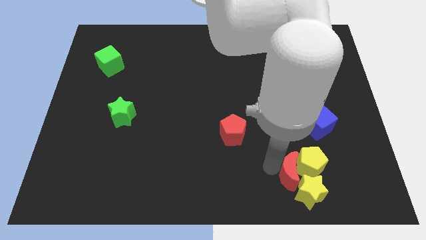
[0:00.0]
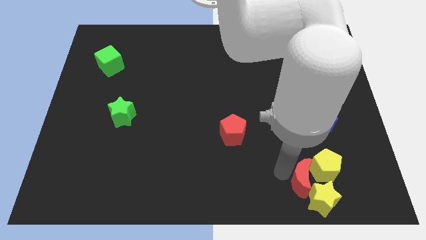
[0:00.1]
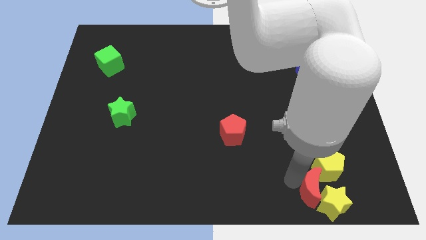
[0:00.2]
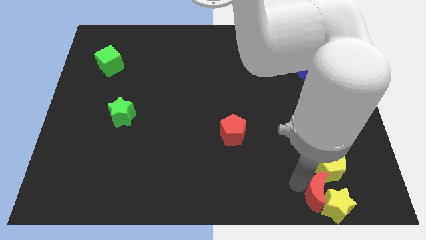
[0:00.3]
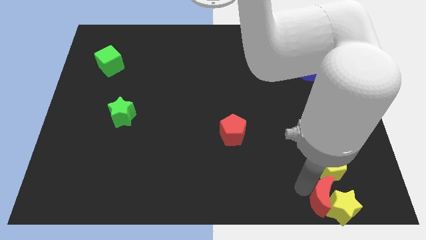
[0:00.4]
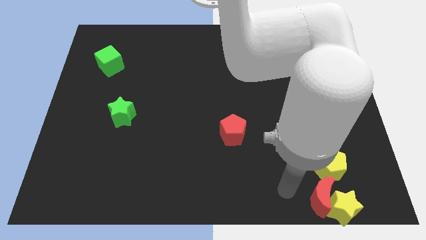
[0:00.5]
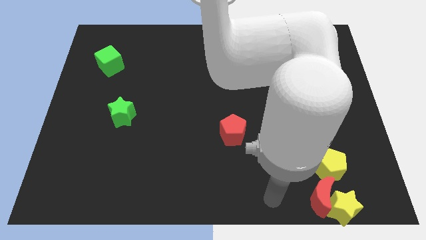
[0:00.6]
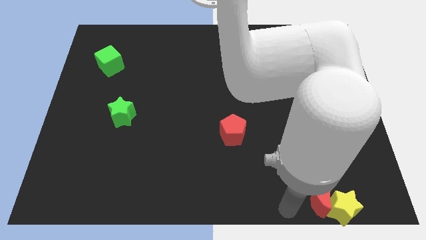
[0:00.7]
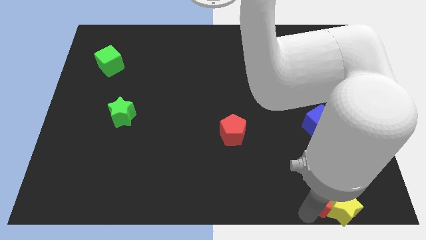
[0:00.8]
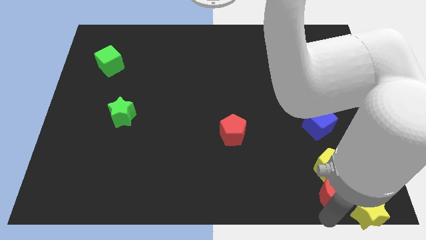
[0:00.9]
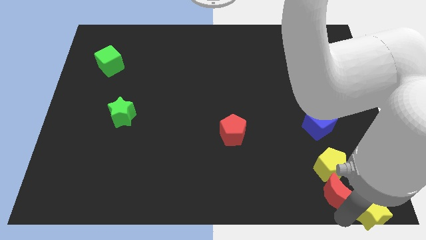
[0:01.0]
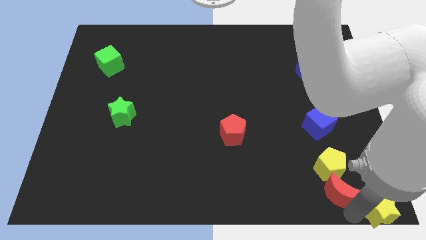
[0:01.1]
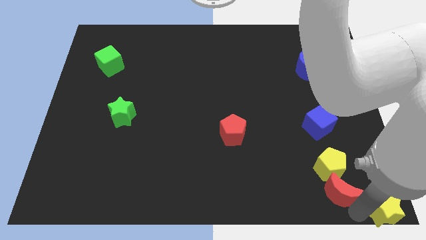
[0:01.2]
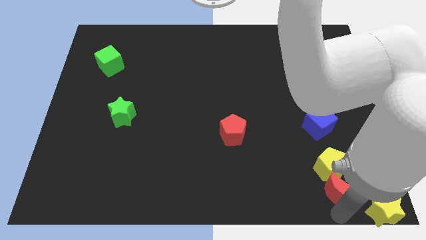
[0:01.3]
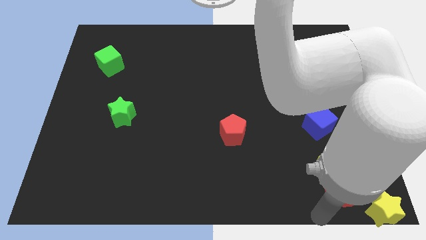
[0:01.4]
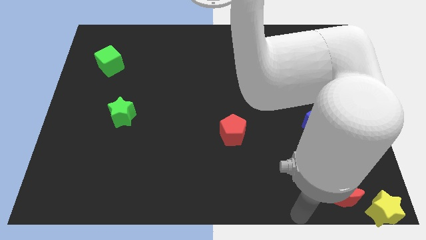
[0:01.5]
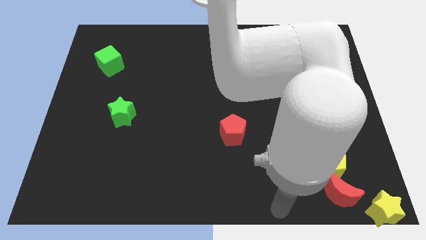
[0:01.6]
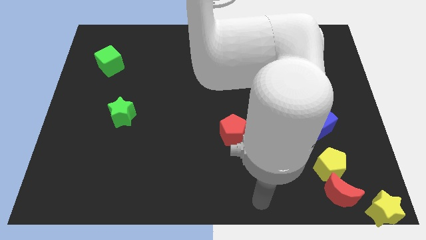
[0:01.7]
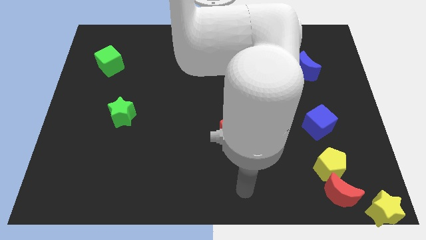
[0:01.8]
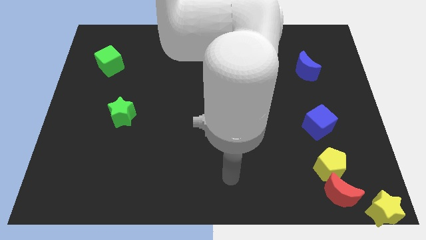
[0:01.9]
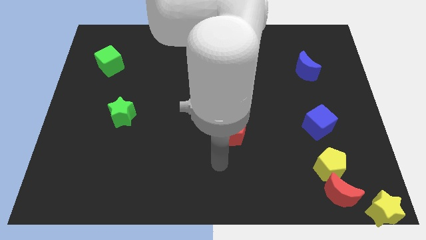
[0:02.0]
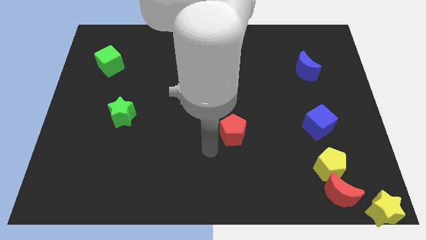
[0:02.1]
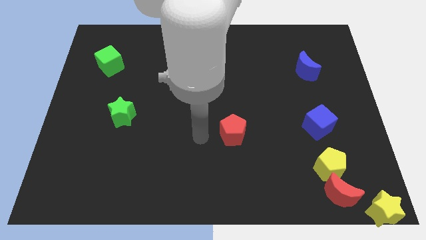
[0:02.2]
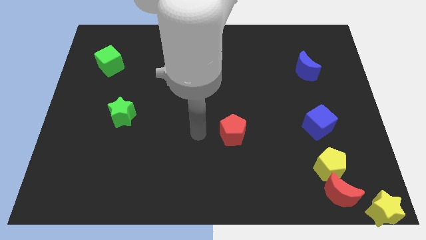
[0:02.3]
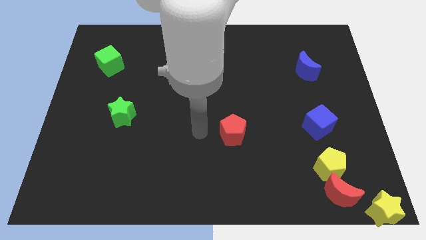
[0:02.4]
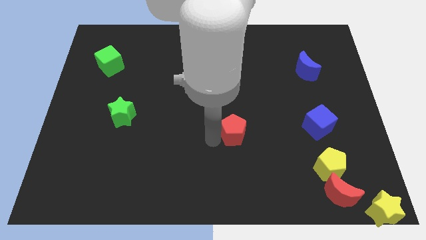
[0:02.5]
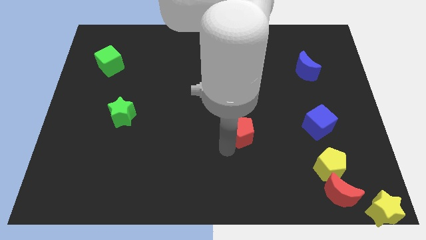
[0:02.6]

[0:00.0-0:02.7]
place your arm left to the red pentagon

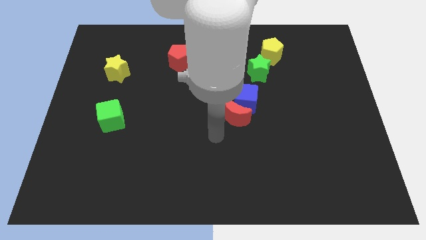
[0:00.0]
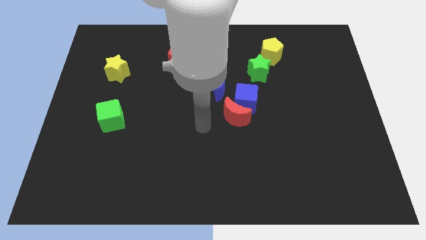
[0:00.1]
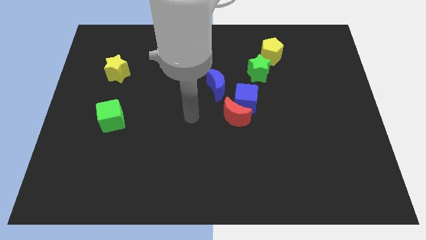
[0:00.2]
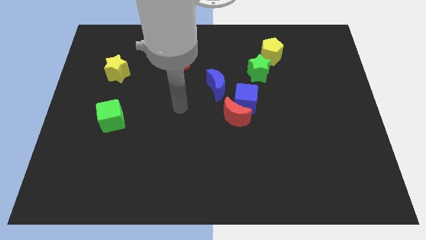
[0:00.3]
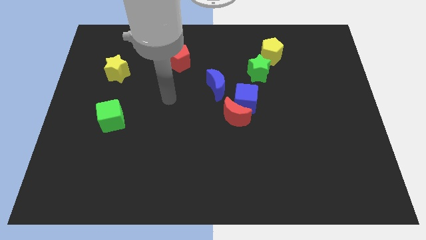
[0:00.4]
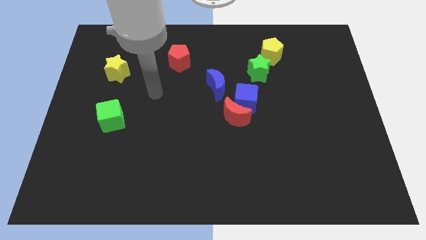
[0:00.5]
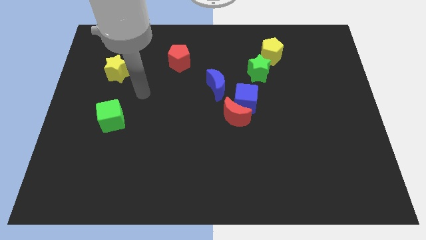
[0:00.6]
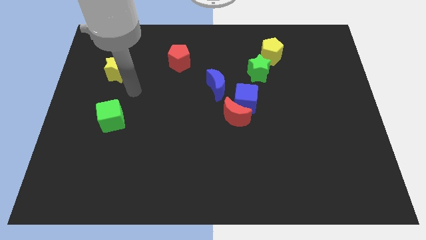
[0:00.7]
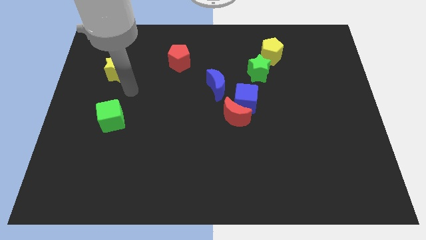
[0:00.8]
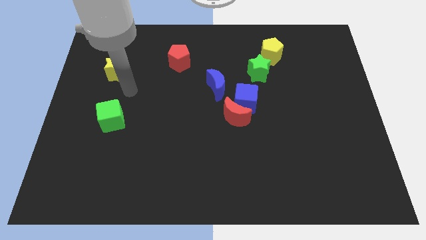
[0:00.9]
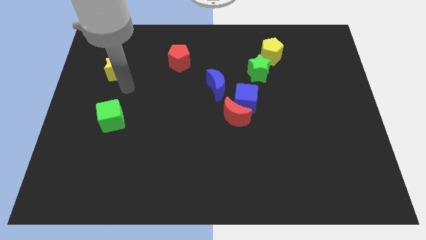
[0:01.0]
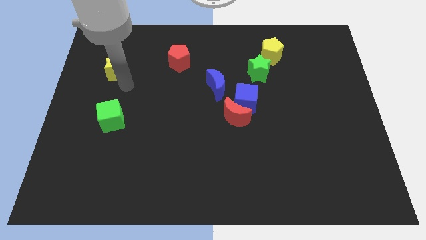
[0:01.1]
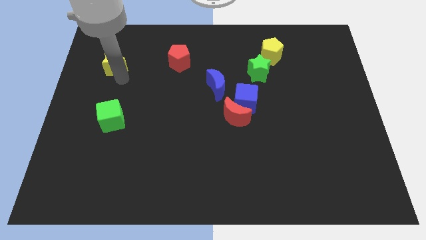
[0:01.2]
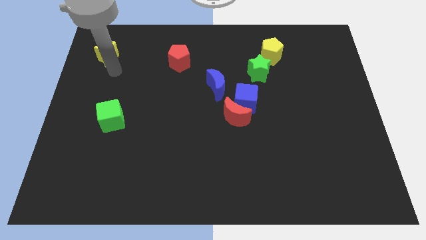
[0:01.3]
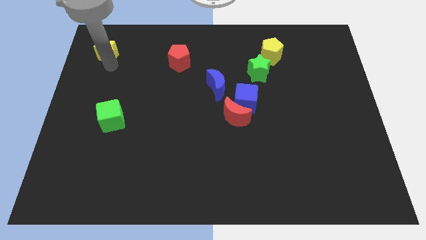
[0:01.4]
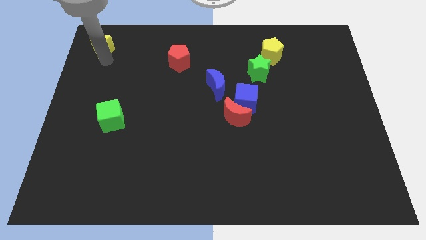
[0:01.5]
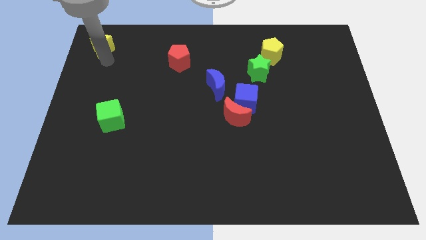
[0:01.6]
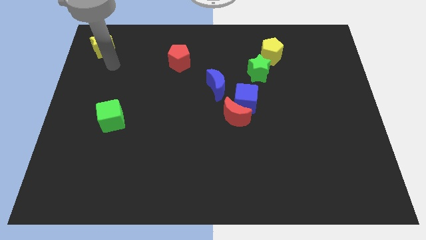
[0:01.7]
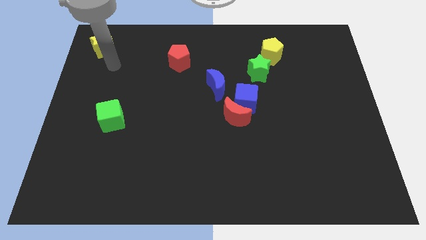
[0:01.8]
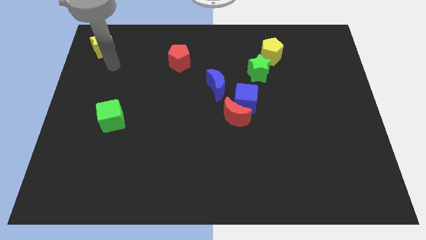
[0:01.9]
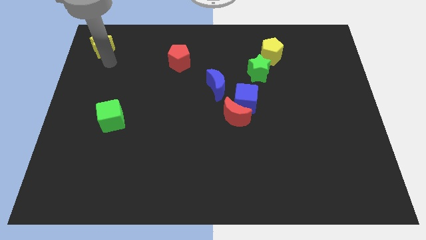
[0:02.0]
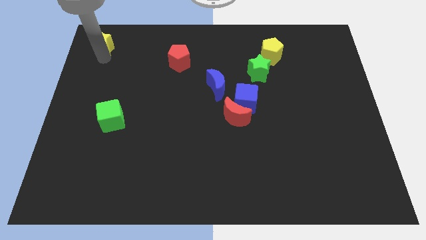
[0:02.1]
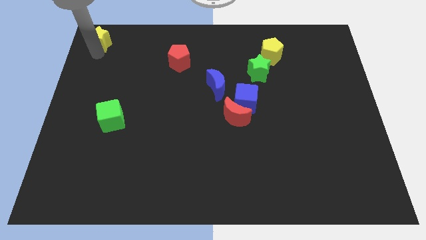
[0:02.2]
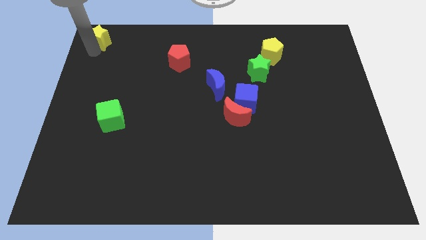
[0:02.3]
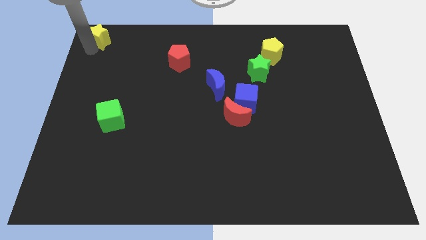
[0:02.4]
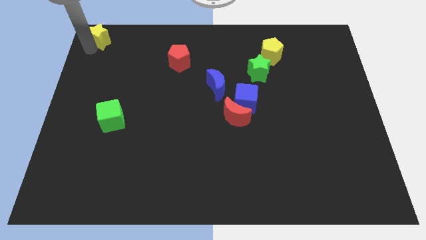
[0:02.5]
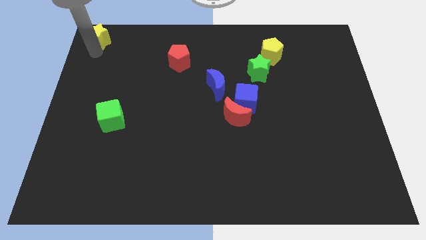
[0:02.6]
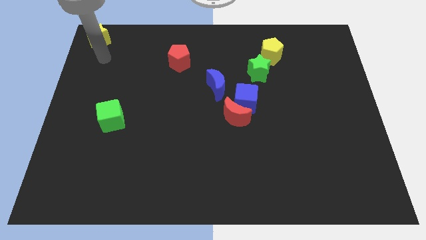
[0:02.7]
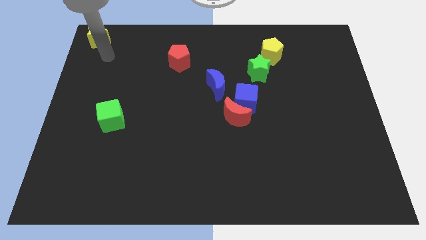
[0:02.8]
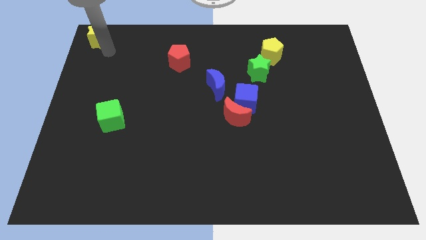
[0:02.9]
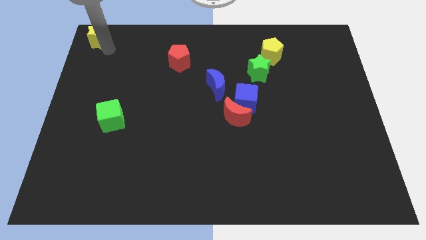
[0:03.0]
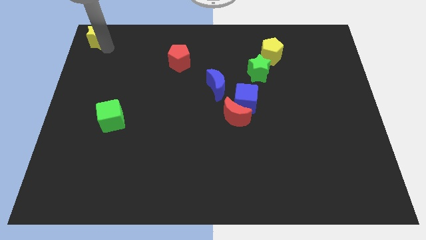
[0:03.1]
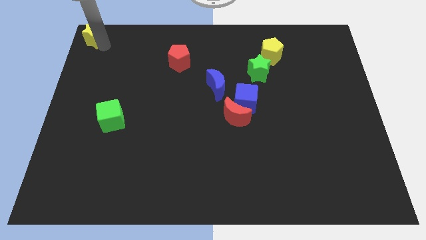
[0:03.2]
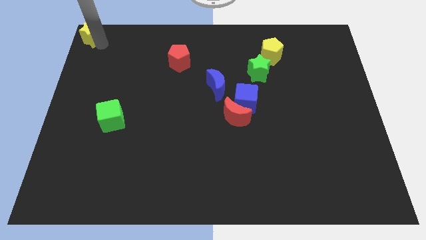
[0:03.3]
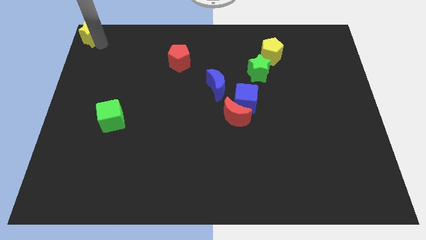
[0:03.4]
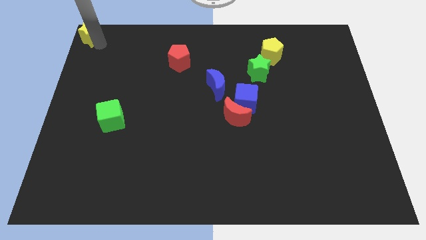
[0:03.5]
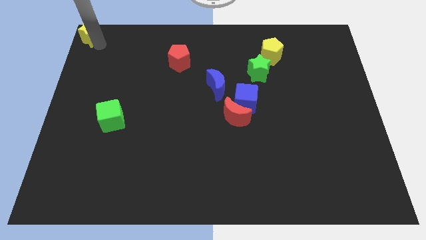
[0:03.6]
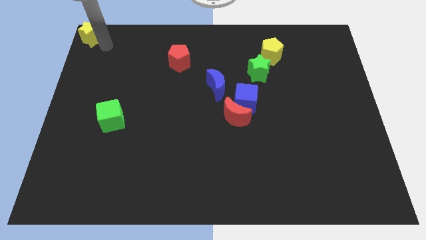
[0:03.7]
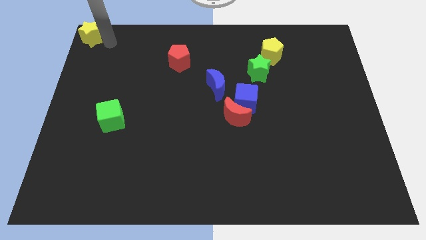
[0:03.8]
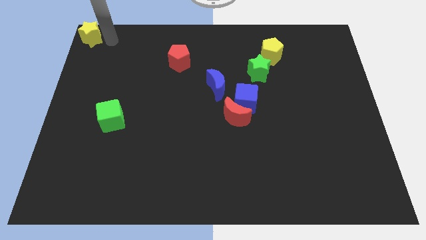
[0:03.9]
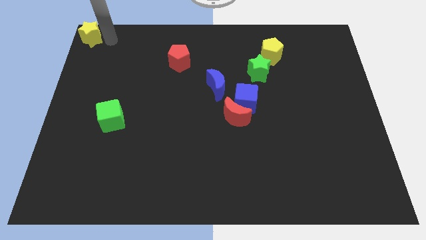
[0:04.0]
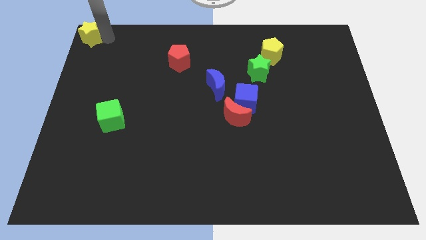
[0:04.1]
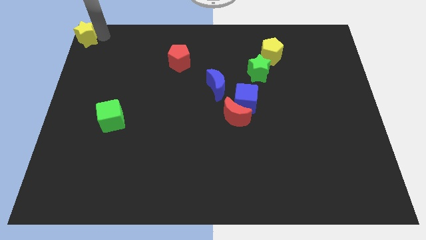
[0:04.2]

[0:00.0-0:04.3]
move the yellow star to the top left side

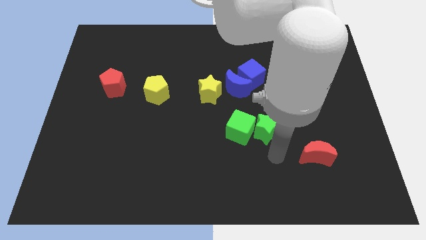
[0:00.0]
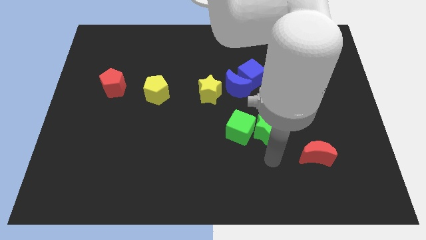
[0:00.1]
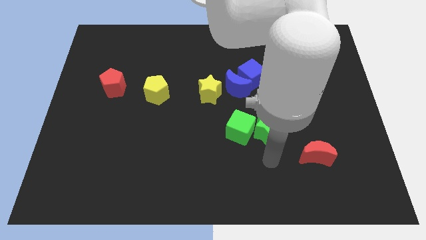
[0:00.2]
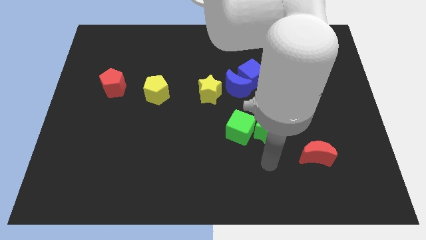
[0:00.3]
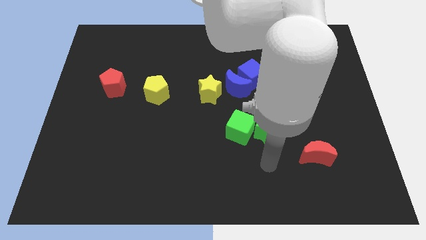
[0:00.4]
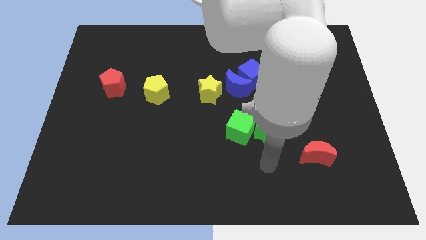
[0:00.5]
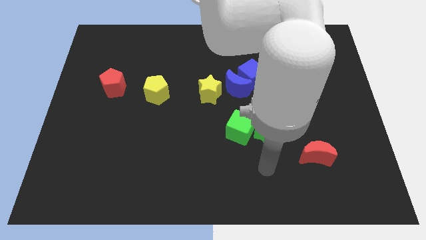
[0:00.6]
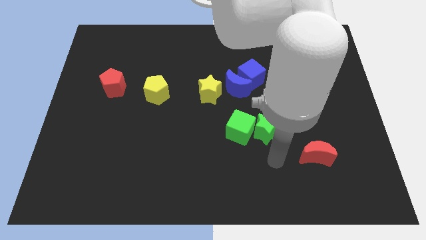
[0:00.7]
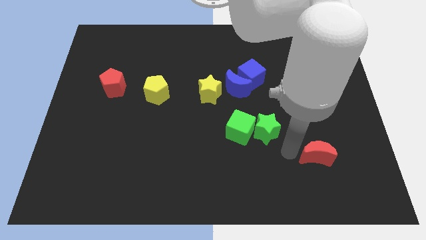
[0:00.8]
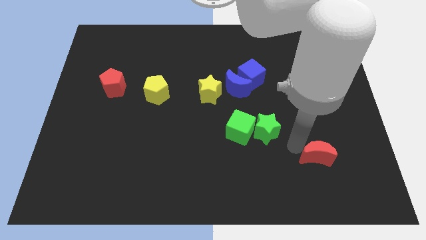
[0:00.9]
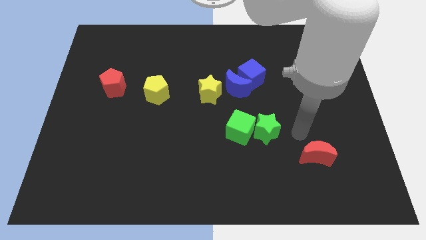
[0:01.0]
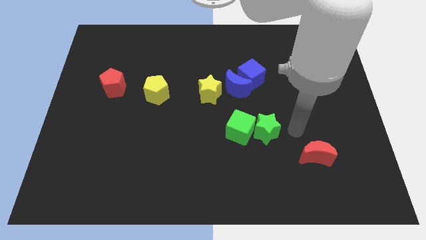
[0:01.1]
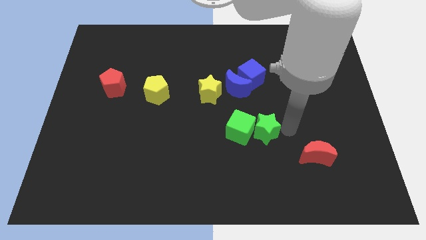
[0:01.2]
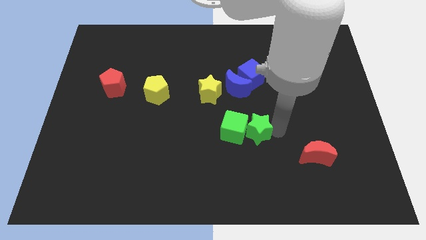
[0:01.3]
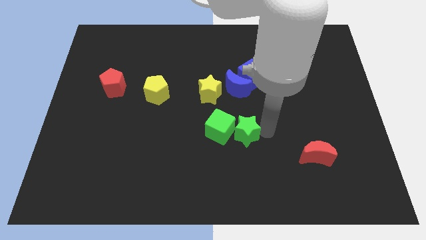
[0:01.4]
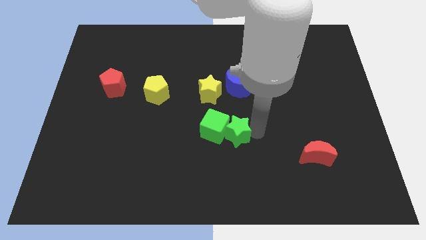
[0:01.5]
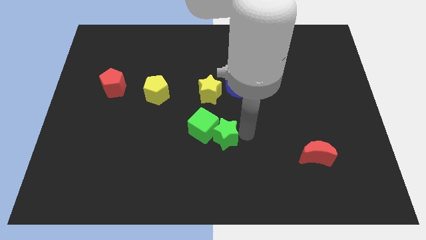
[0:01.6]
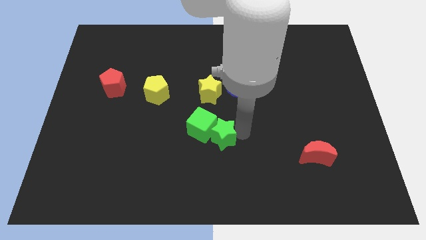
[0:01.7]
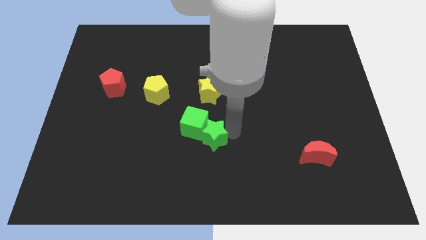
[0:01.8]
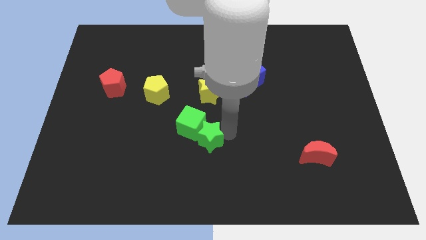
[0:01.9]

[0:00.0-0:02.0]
push the green star and green cube to the left side
